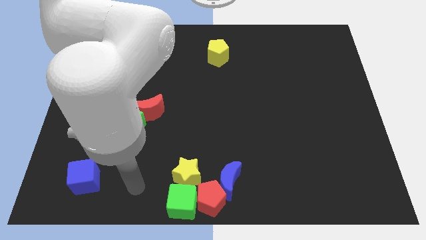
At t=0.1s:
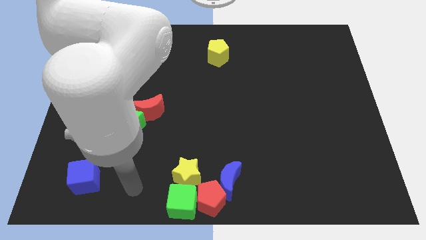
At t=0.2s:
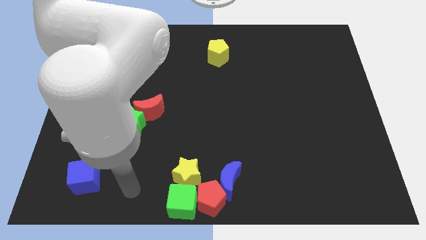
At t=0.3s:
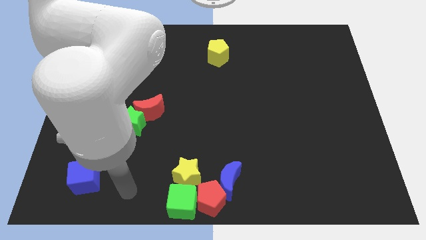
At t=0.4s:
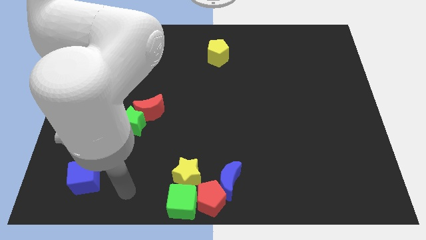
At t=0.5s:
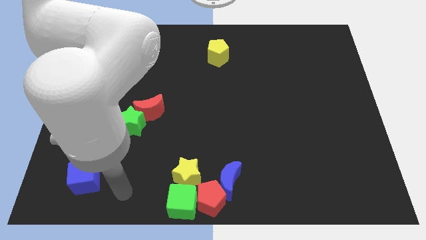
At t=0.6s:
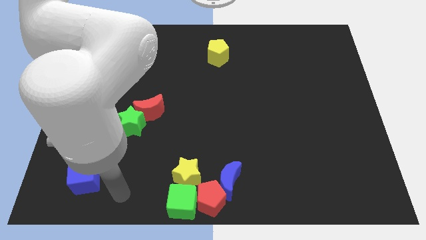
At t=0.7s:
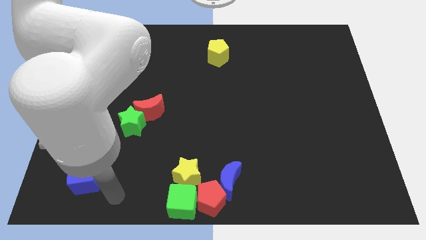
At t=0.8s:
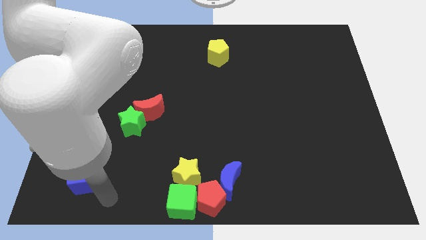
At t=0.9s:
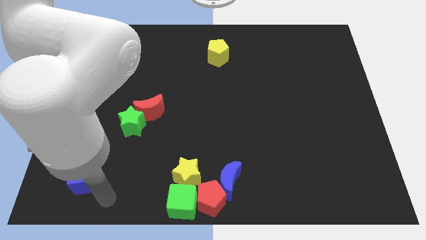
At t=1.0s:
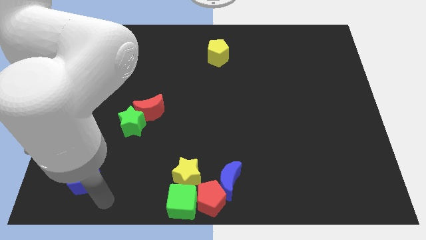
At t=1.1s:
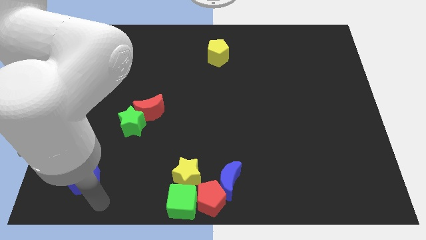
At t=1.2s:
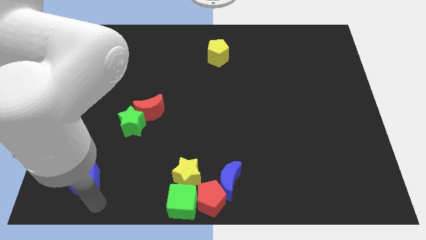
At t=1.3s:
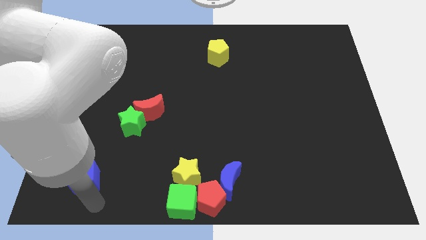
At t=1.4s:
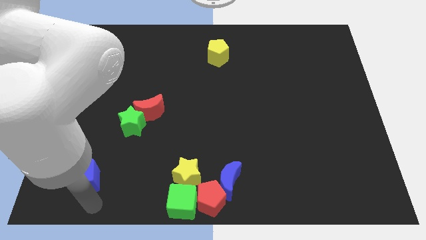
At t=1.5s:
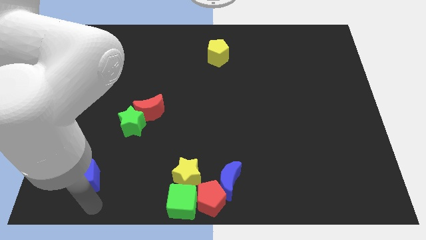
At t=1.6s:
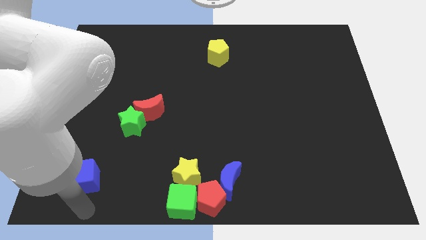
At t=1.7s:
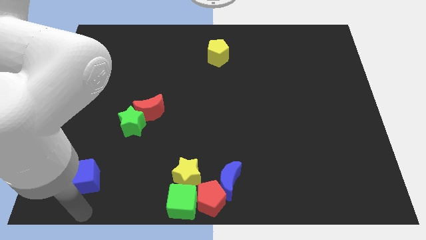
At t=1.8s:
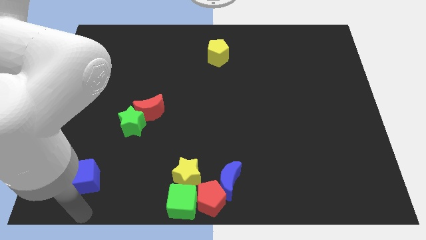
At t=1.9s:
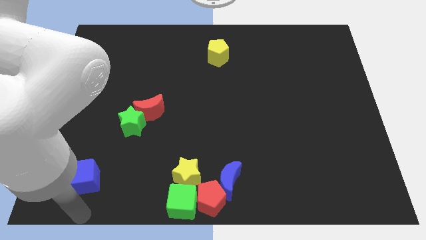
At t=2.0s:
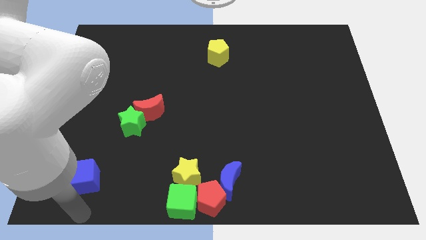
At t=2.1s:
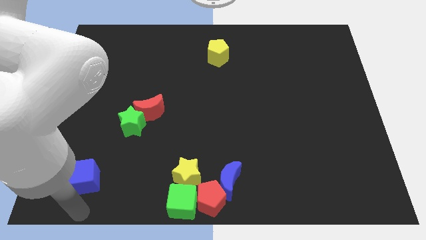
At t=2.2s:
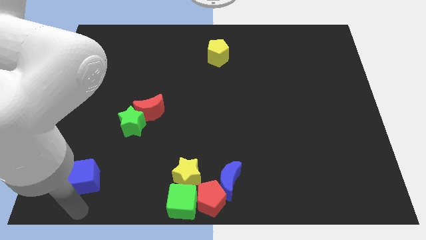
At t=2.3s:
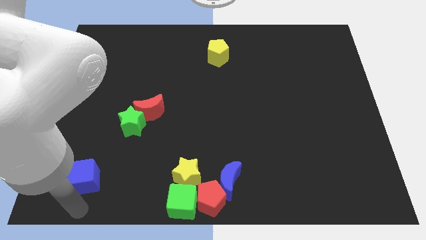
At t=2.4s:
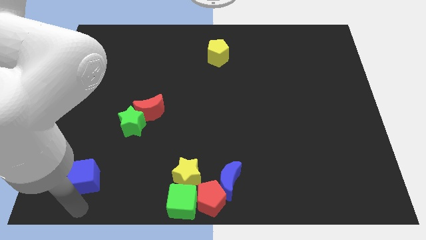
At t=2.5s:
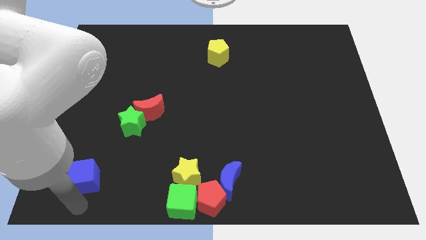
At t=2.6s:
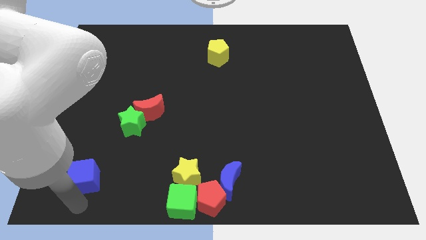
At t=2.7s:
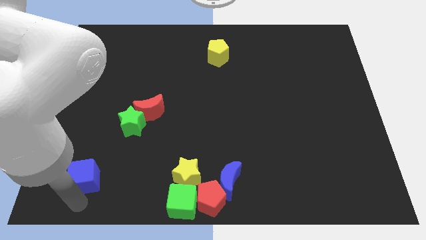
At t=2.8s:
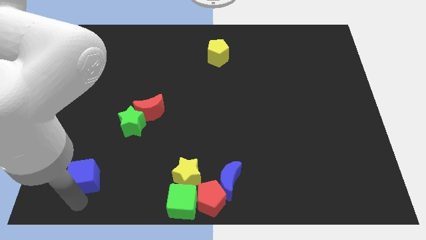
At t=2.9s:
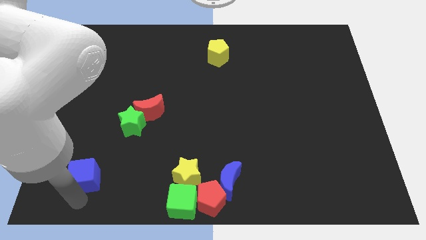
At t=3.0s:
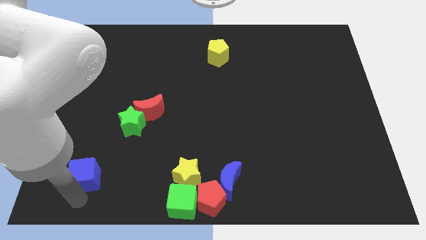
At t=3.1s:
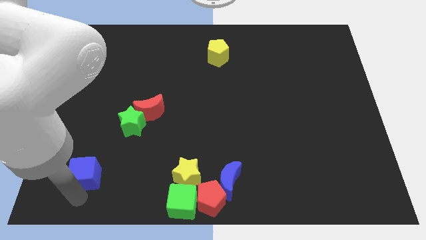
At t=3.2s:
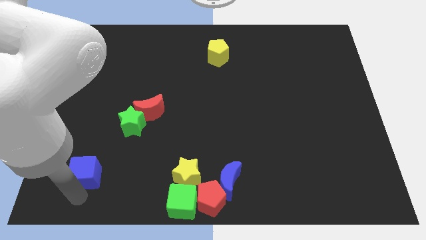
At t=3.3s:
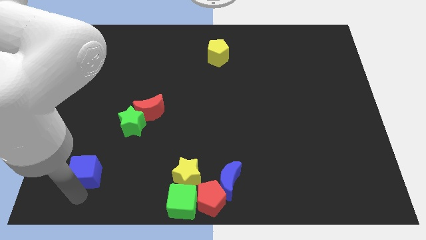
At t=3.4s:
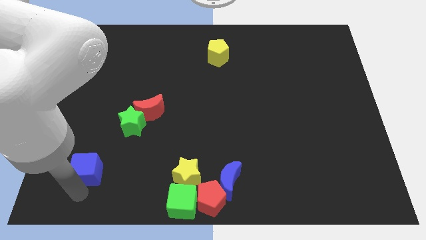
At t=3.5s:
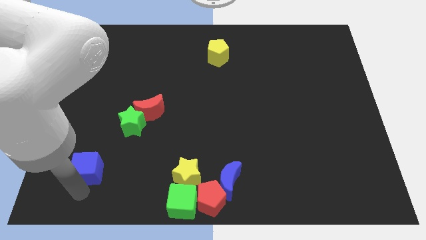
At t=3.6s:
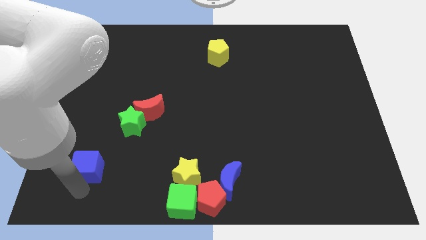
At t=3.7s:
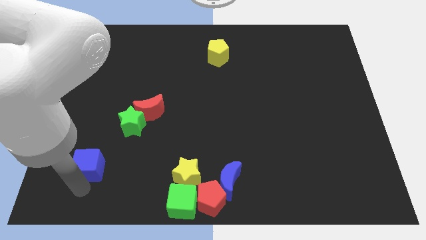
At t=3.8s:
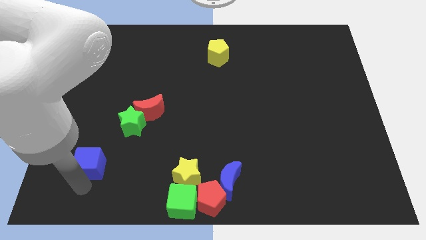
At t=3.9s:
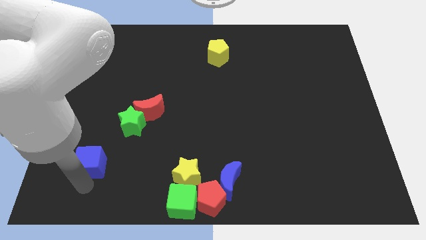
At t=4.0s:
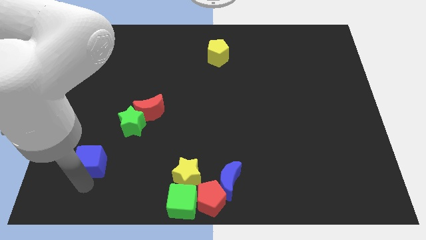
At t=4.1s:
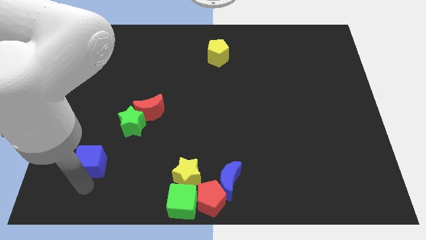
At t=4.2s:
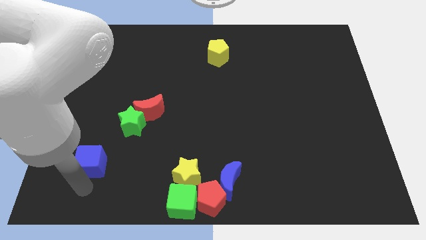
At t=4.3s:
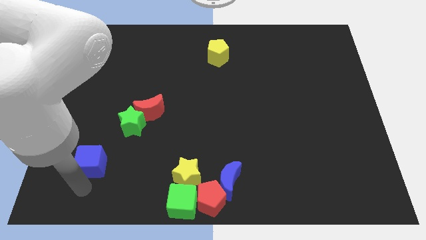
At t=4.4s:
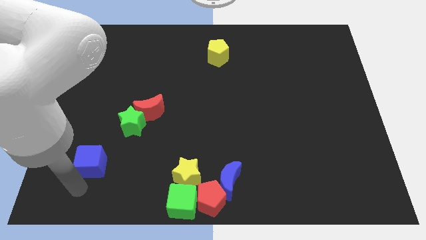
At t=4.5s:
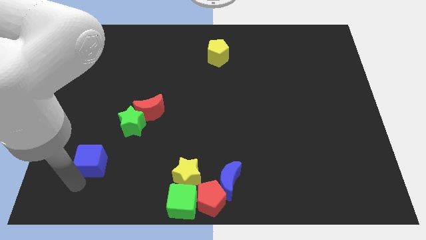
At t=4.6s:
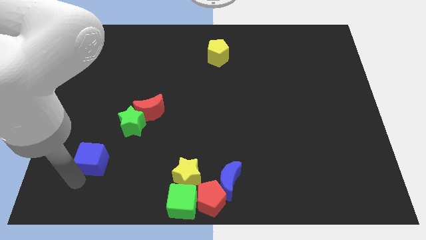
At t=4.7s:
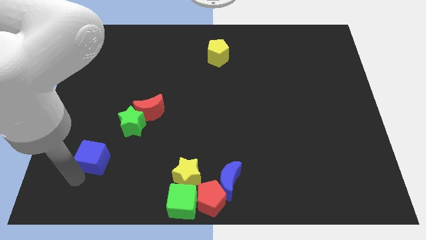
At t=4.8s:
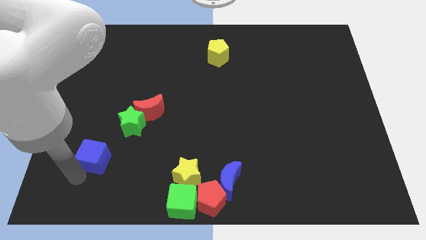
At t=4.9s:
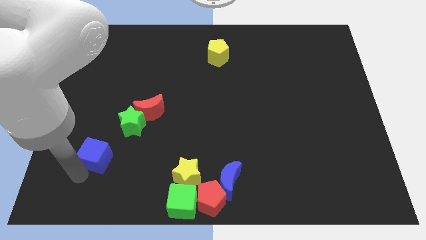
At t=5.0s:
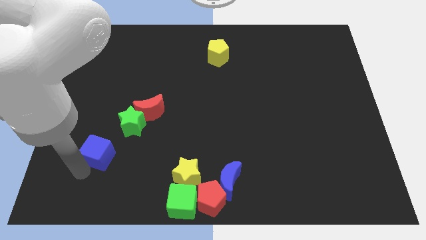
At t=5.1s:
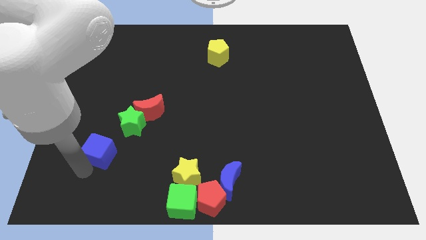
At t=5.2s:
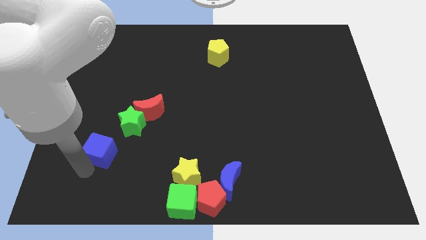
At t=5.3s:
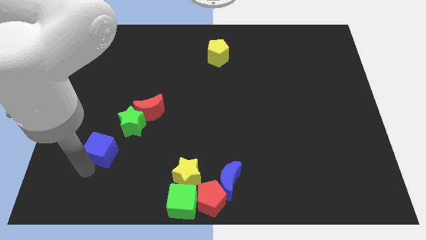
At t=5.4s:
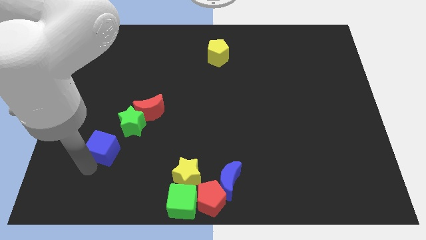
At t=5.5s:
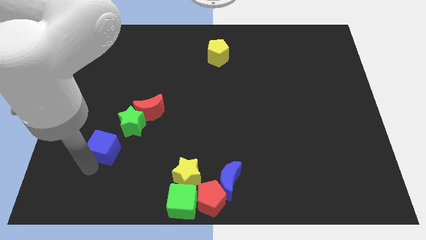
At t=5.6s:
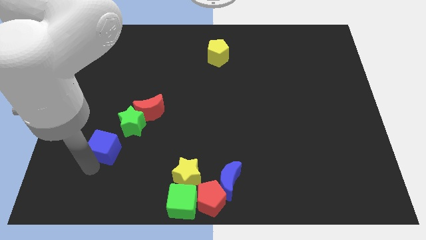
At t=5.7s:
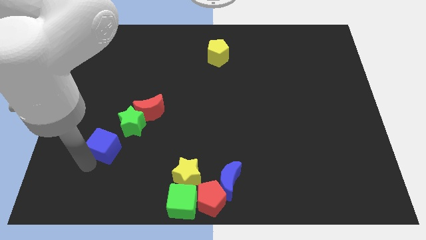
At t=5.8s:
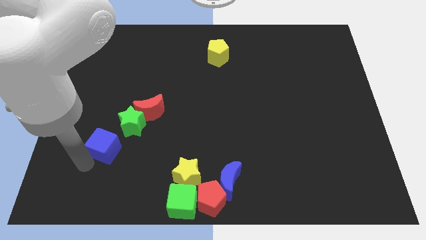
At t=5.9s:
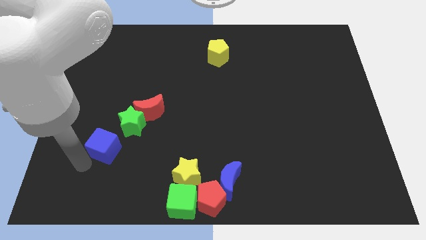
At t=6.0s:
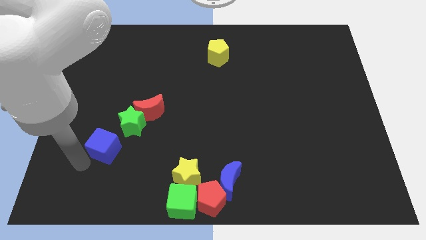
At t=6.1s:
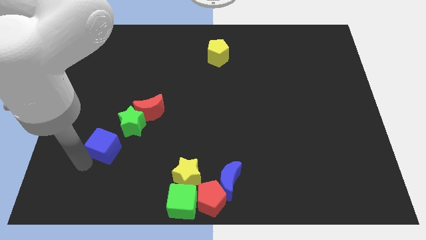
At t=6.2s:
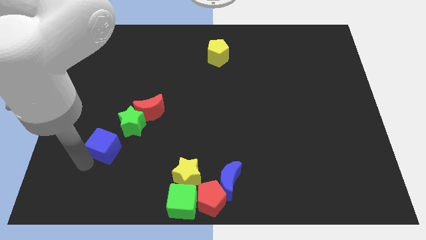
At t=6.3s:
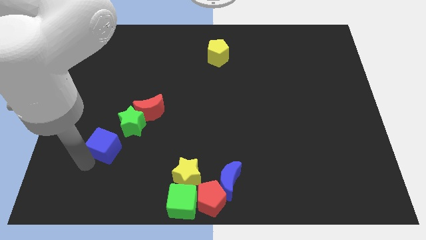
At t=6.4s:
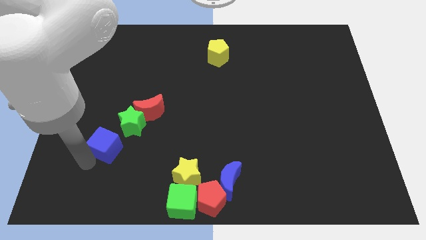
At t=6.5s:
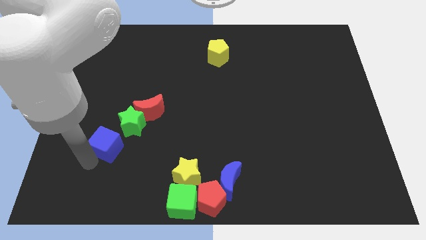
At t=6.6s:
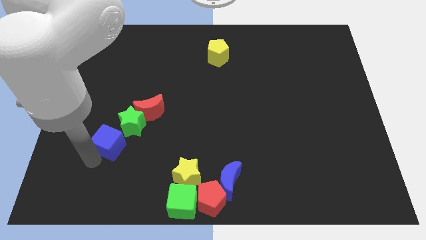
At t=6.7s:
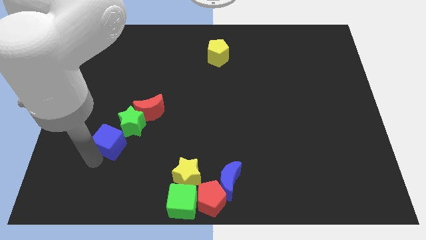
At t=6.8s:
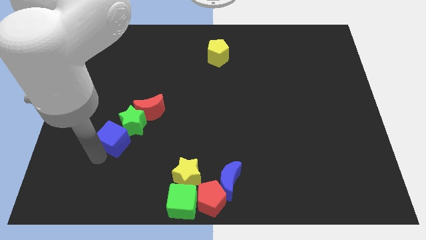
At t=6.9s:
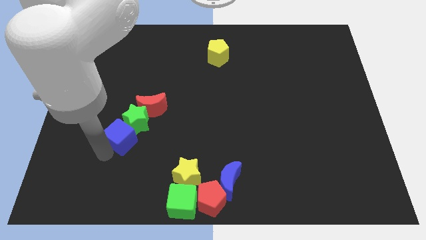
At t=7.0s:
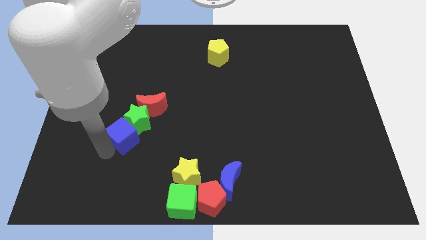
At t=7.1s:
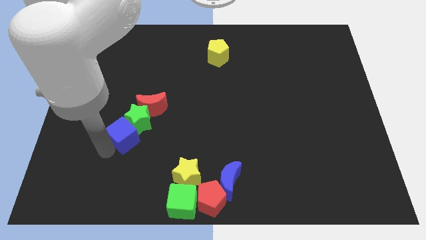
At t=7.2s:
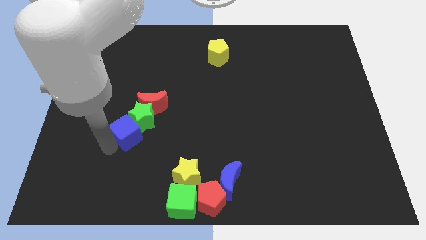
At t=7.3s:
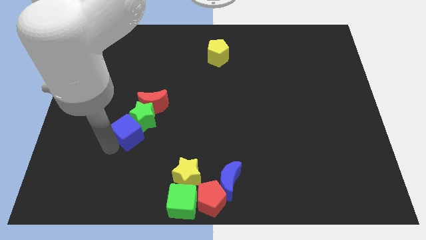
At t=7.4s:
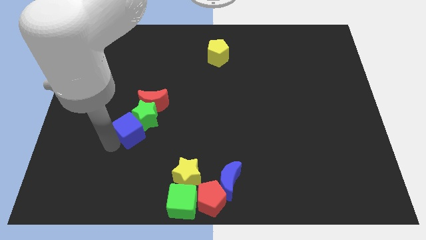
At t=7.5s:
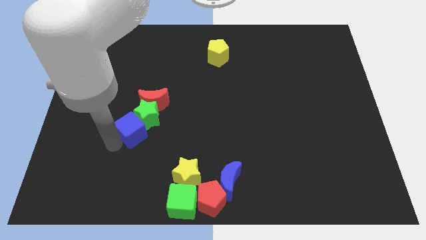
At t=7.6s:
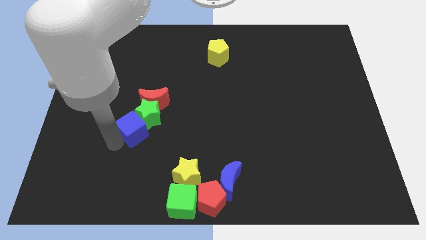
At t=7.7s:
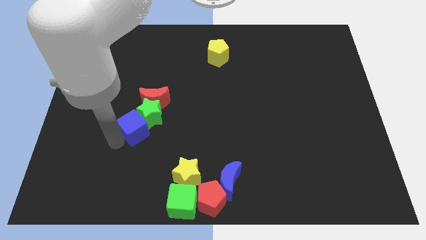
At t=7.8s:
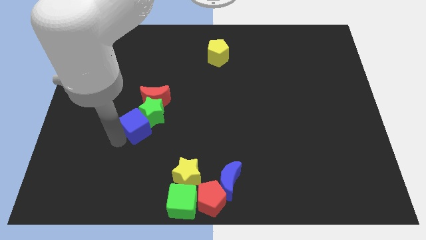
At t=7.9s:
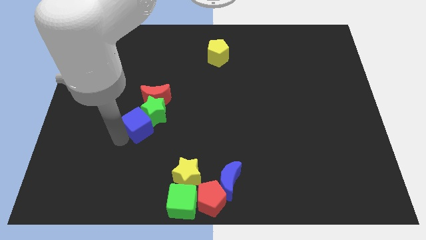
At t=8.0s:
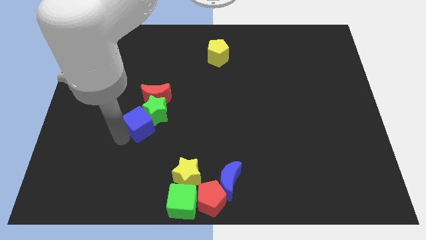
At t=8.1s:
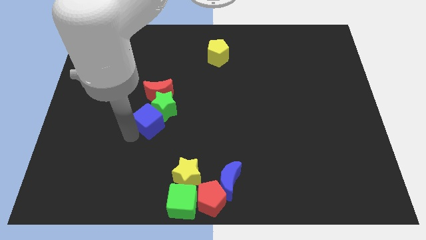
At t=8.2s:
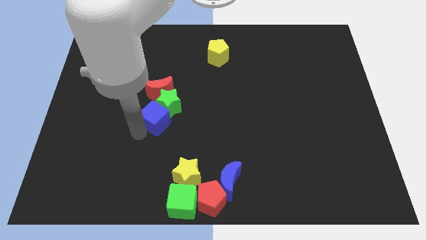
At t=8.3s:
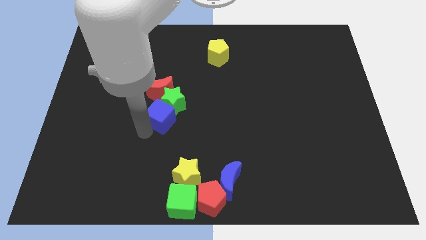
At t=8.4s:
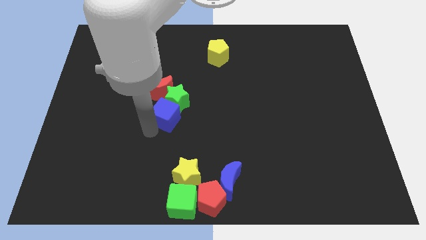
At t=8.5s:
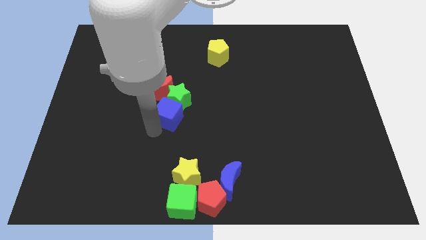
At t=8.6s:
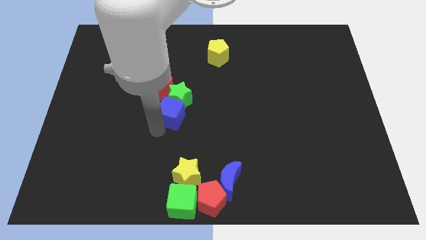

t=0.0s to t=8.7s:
move the blue cube into the green star

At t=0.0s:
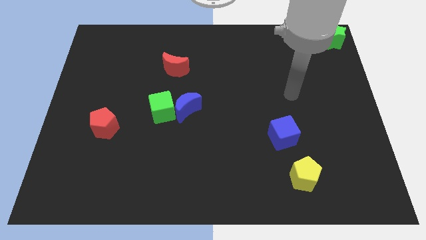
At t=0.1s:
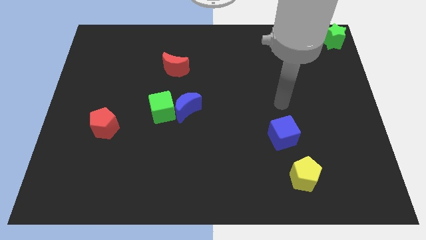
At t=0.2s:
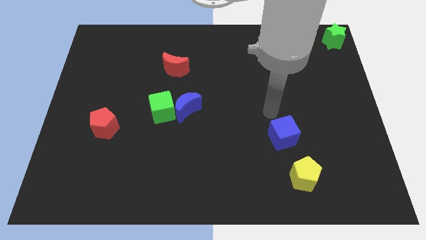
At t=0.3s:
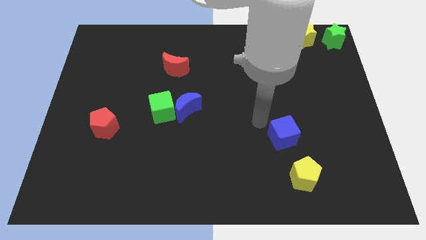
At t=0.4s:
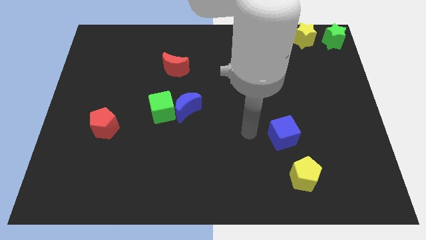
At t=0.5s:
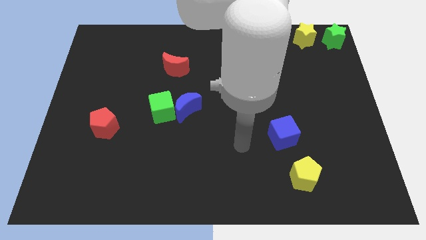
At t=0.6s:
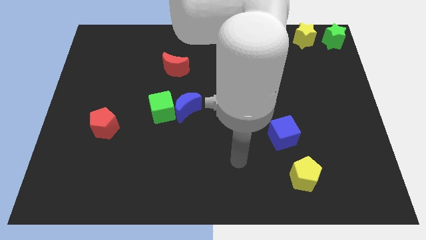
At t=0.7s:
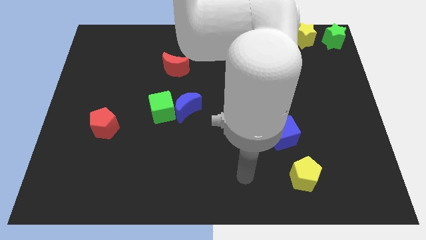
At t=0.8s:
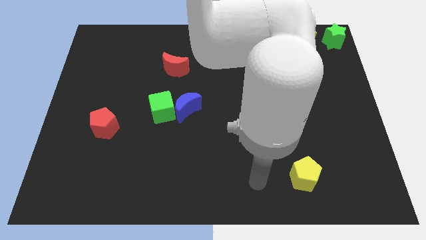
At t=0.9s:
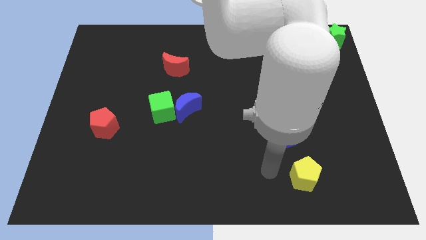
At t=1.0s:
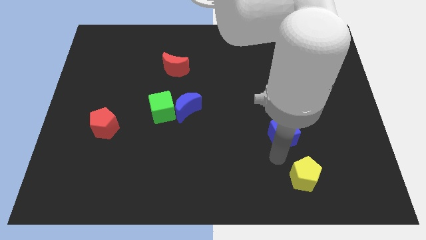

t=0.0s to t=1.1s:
move your arm towards bottom of the blue cube
